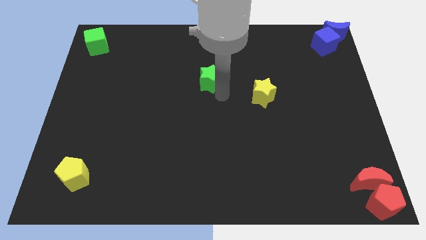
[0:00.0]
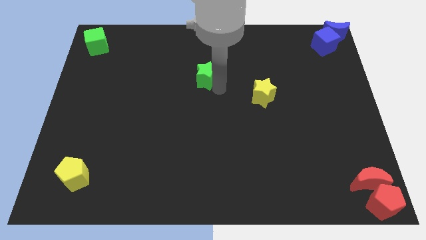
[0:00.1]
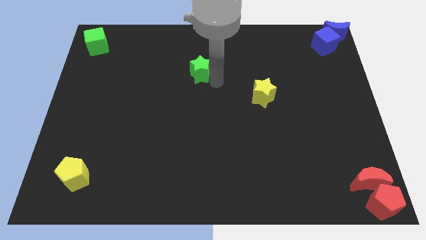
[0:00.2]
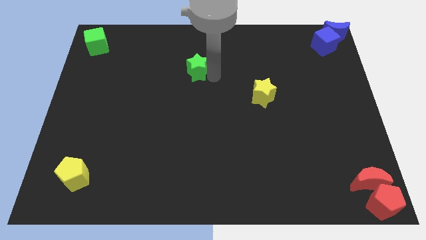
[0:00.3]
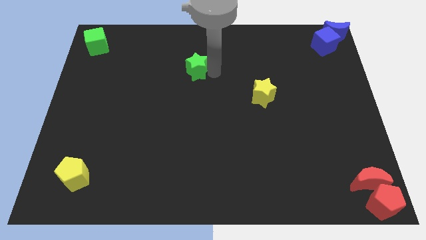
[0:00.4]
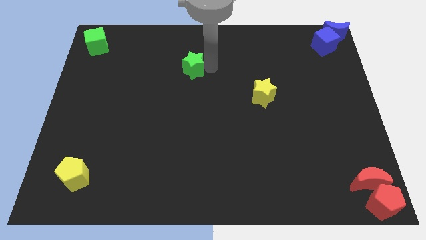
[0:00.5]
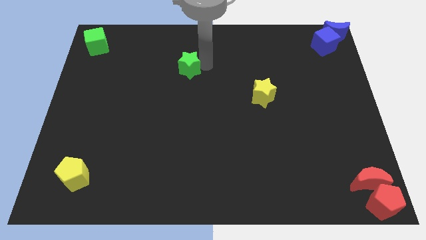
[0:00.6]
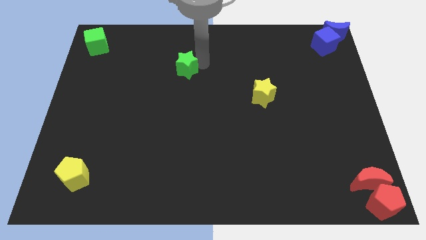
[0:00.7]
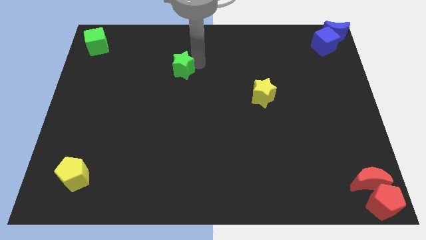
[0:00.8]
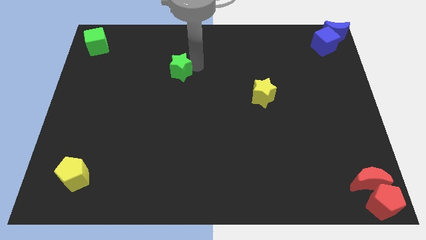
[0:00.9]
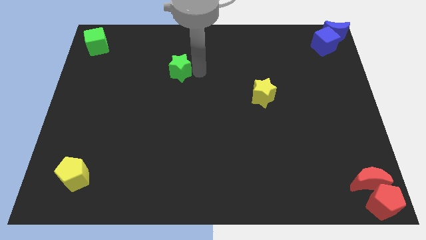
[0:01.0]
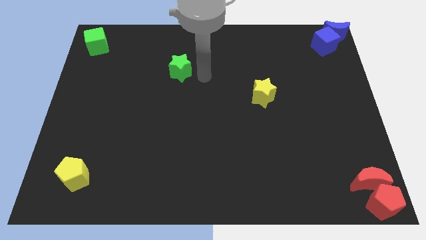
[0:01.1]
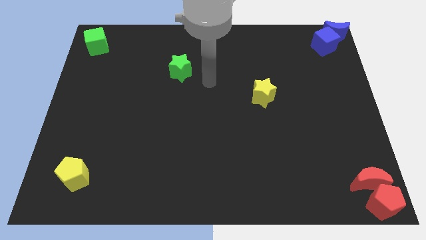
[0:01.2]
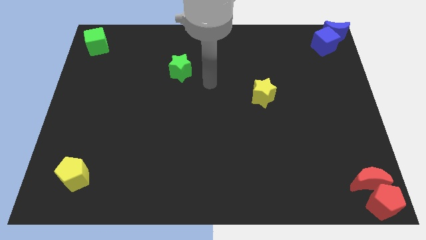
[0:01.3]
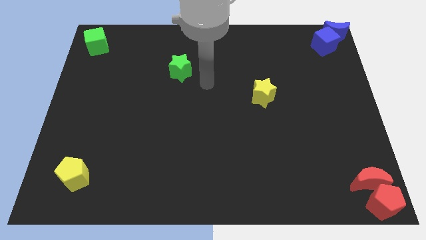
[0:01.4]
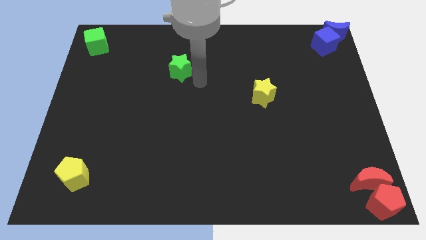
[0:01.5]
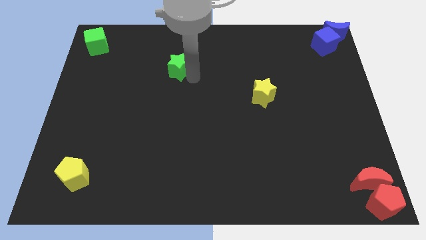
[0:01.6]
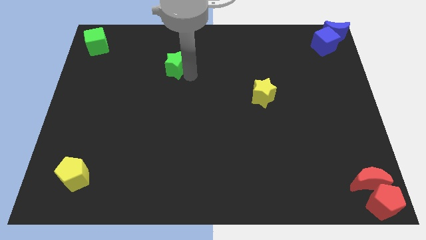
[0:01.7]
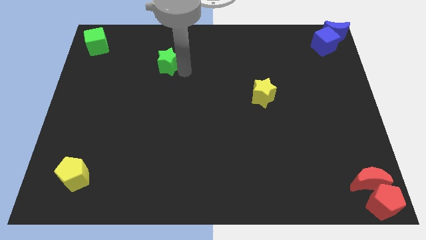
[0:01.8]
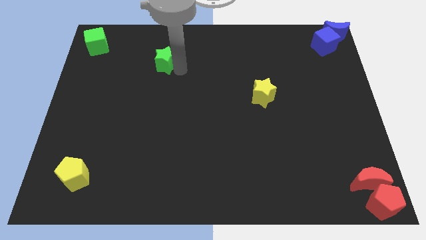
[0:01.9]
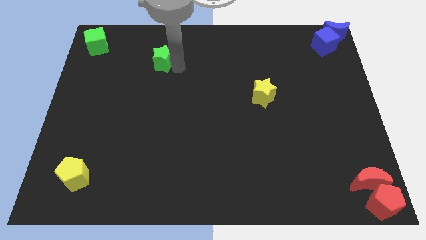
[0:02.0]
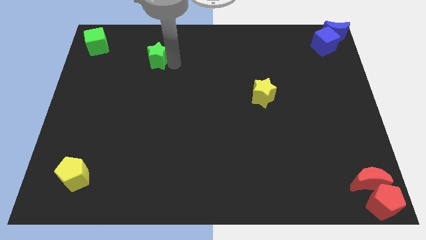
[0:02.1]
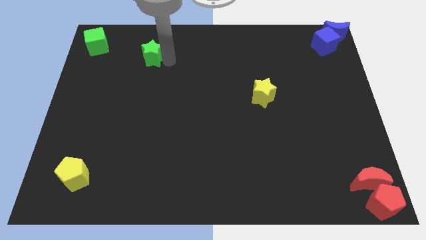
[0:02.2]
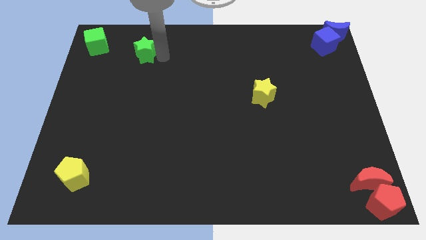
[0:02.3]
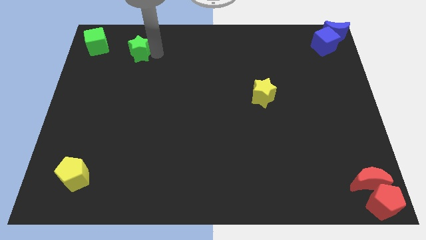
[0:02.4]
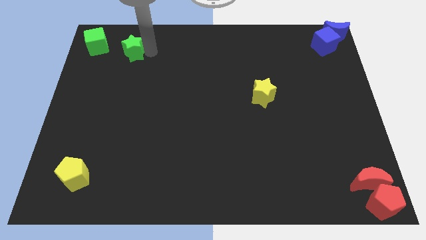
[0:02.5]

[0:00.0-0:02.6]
place the green star diagonally to green cube

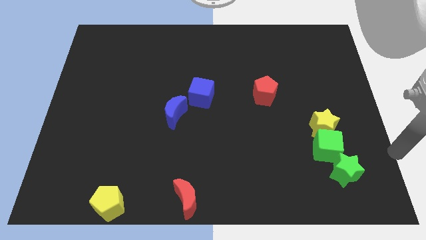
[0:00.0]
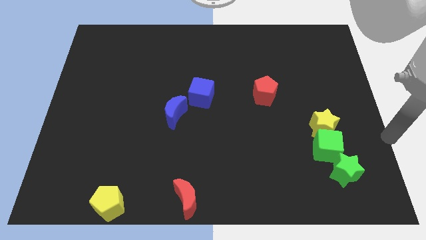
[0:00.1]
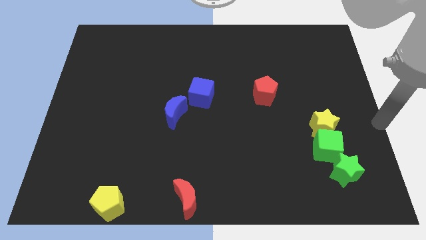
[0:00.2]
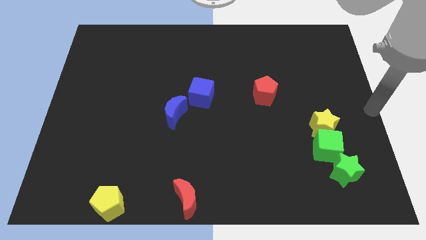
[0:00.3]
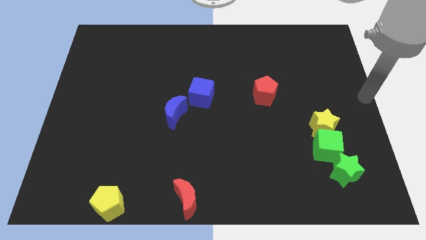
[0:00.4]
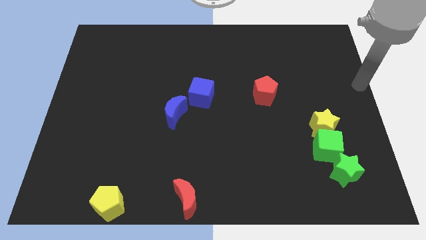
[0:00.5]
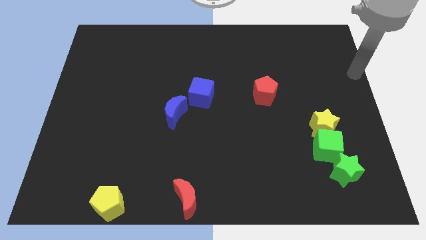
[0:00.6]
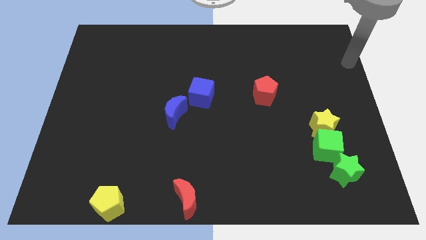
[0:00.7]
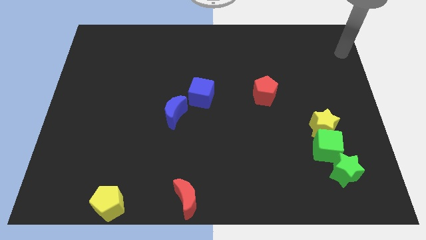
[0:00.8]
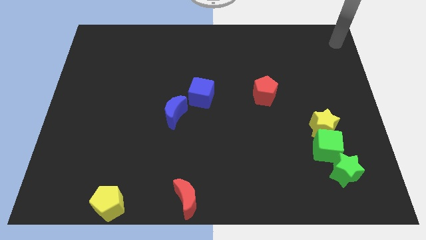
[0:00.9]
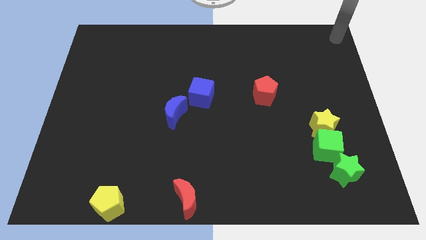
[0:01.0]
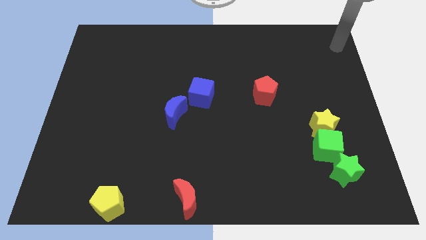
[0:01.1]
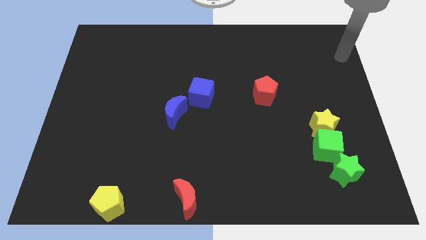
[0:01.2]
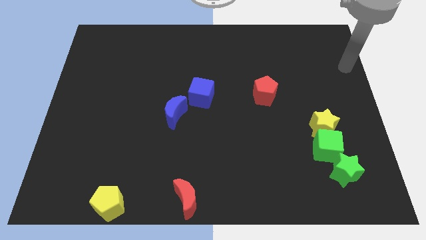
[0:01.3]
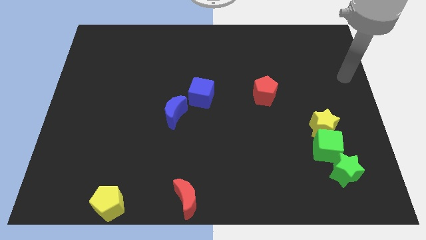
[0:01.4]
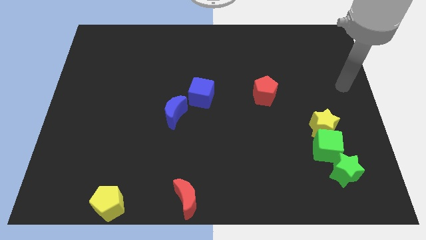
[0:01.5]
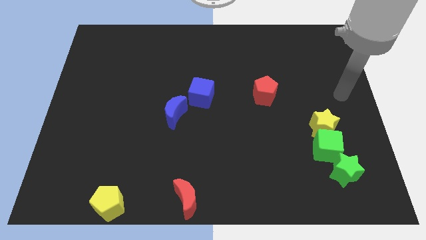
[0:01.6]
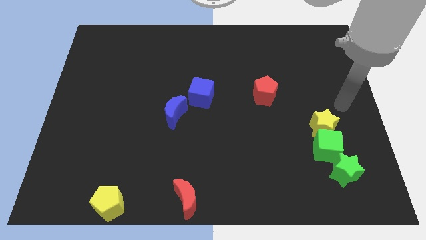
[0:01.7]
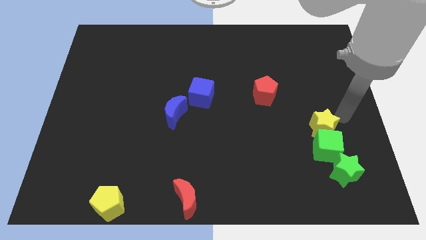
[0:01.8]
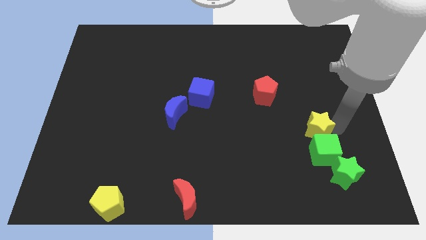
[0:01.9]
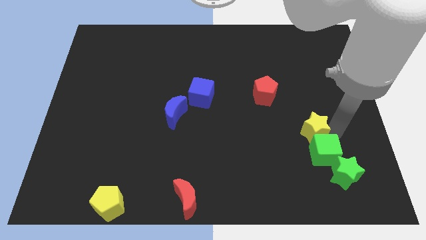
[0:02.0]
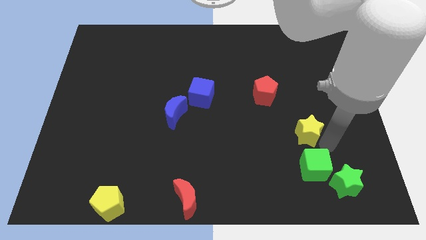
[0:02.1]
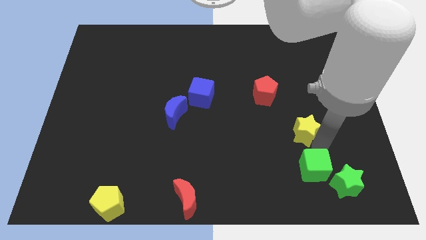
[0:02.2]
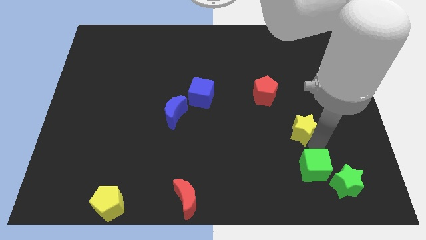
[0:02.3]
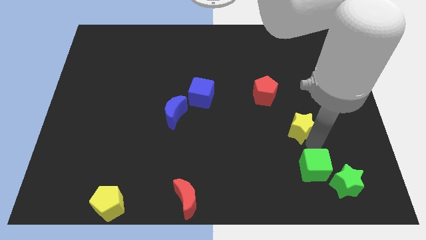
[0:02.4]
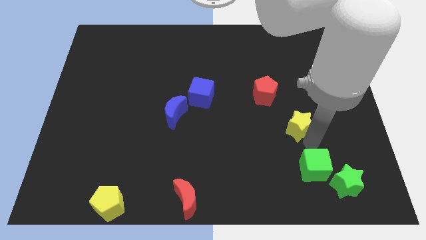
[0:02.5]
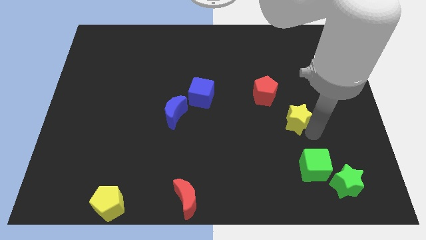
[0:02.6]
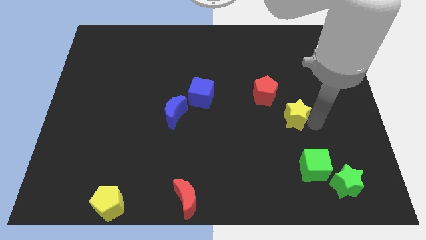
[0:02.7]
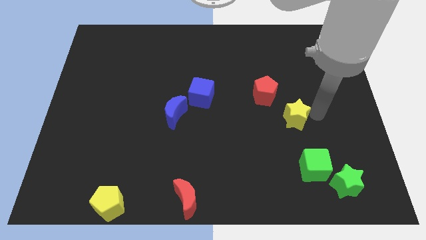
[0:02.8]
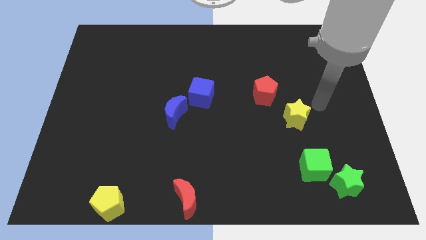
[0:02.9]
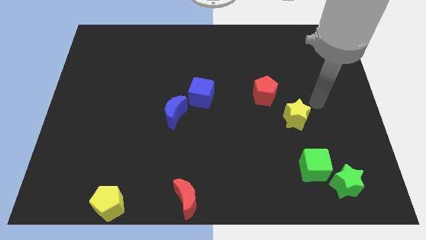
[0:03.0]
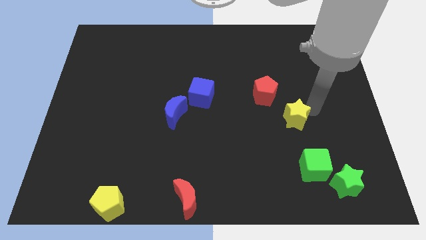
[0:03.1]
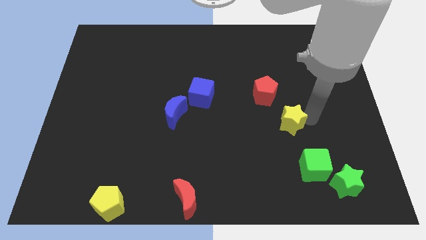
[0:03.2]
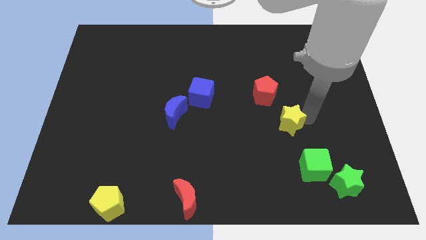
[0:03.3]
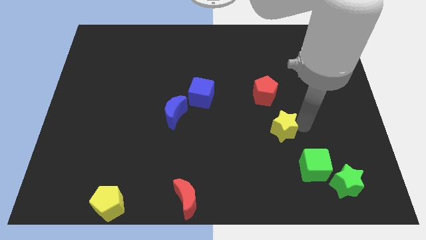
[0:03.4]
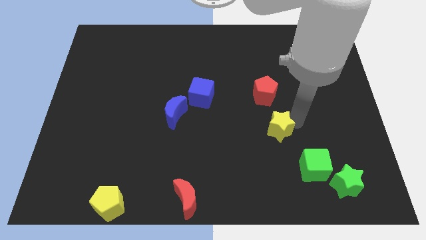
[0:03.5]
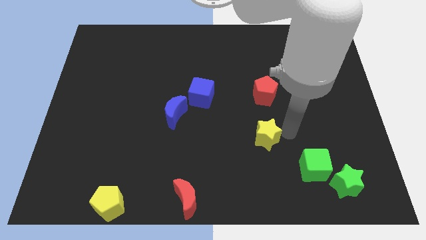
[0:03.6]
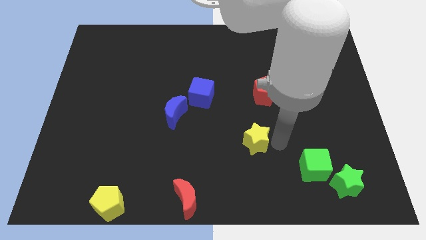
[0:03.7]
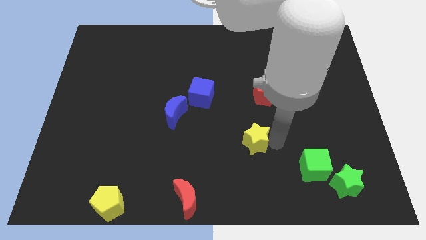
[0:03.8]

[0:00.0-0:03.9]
separate yellow star from the green cube

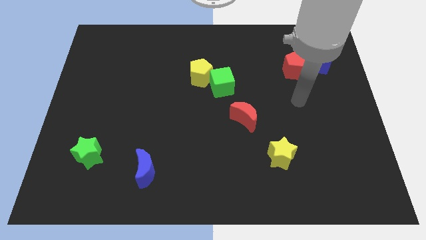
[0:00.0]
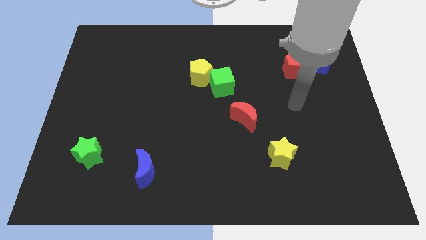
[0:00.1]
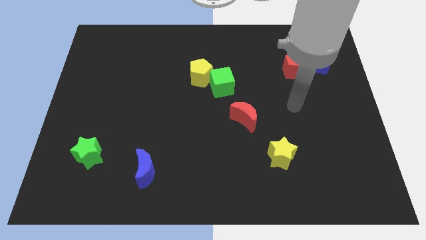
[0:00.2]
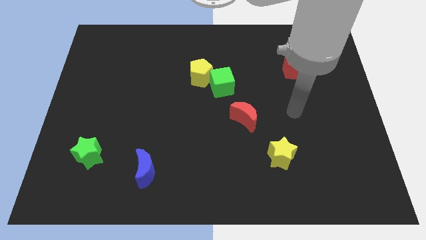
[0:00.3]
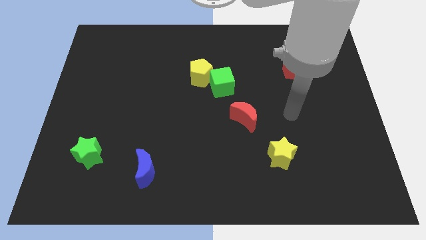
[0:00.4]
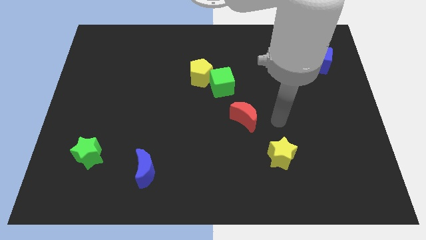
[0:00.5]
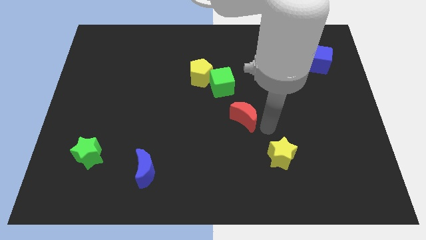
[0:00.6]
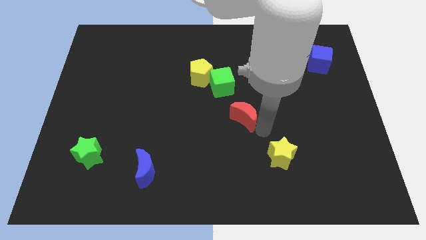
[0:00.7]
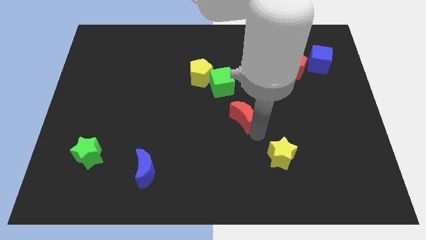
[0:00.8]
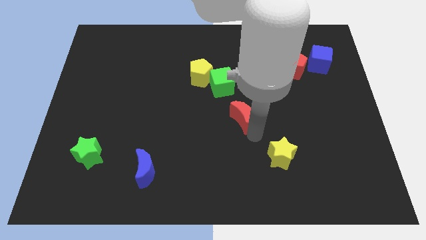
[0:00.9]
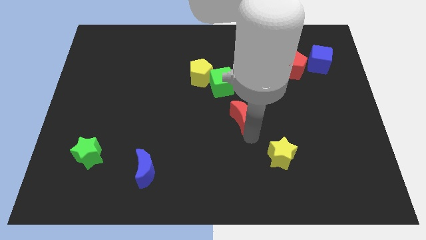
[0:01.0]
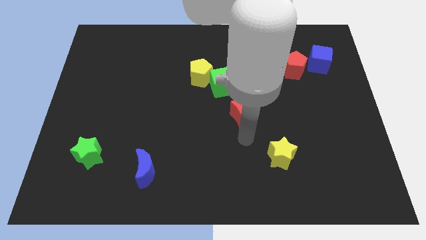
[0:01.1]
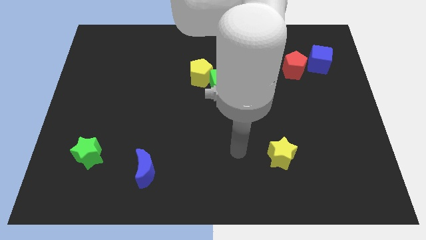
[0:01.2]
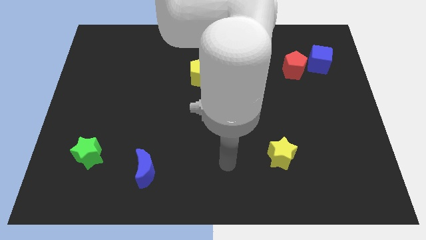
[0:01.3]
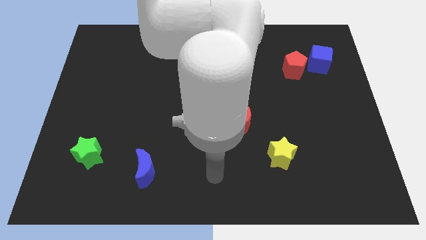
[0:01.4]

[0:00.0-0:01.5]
point your arm at the bottom center of the board

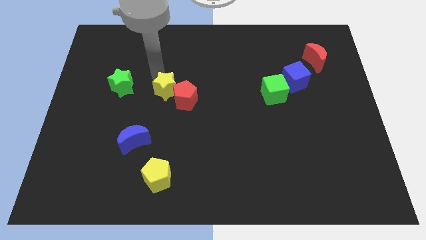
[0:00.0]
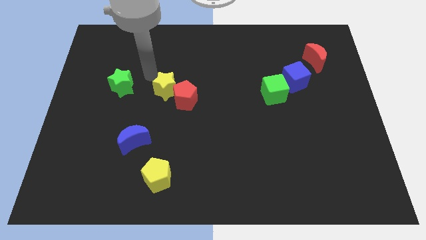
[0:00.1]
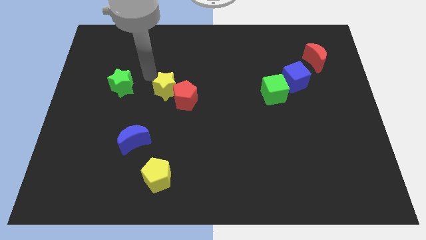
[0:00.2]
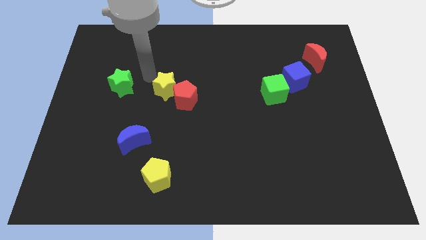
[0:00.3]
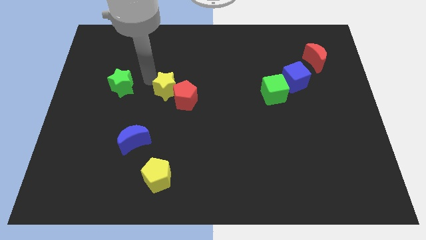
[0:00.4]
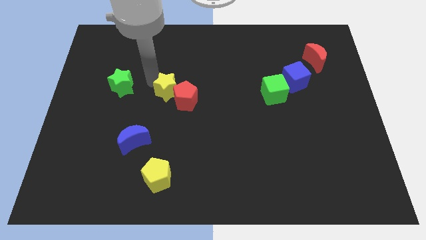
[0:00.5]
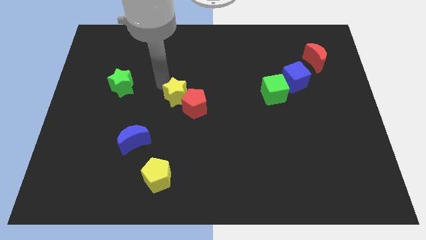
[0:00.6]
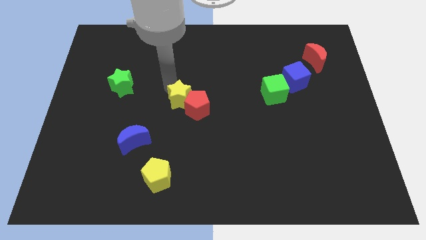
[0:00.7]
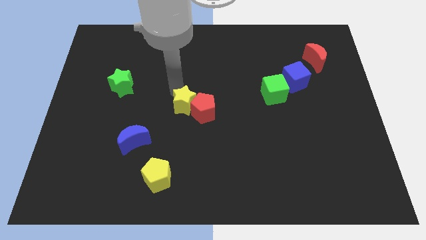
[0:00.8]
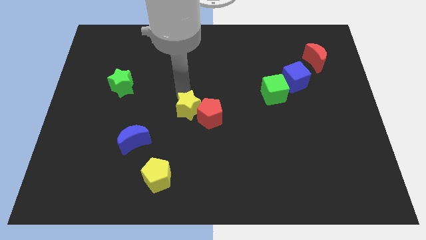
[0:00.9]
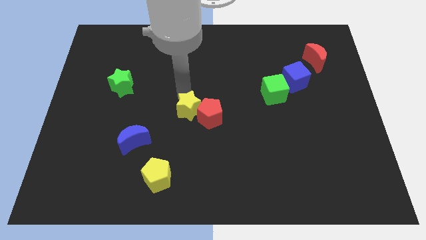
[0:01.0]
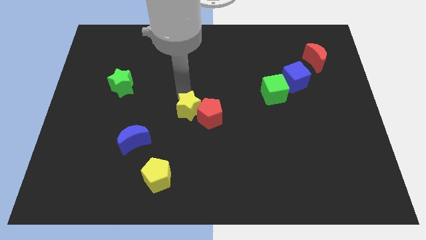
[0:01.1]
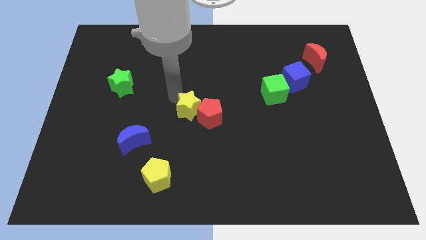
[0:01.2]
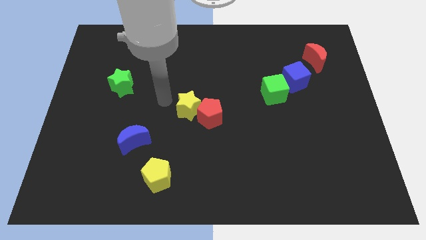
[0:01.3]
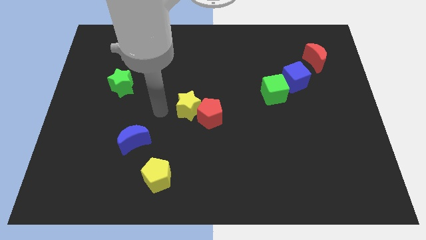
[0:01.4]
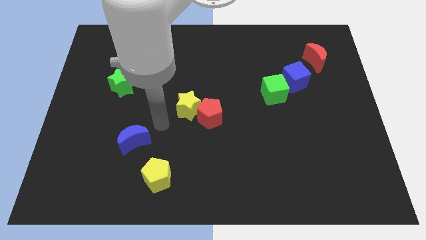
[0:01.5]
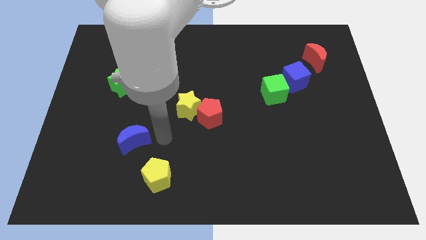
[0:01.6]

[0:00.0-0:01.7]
push the red pentagon with the yellow star
